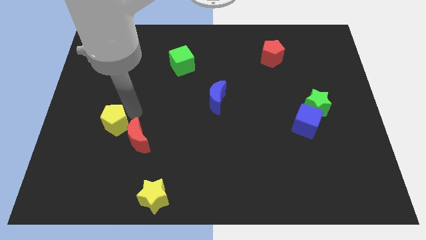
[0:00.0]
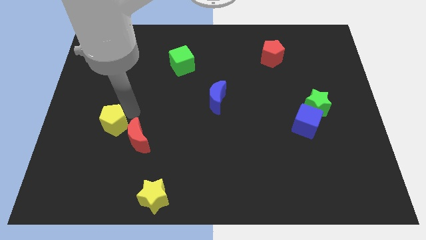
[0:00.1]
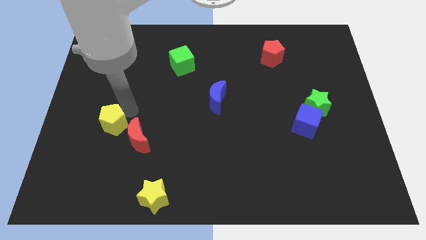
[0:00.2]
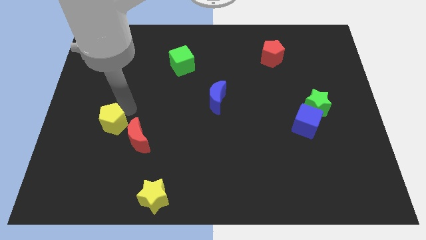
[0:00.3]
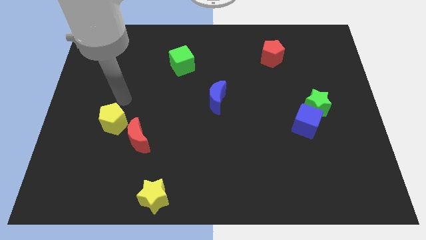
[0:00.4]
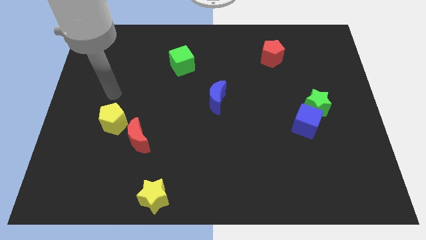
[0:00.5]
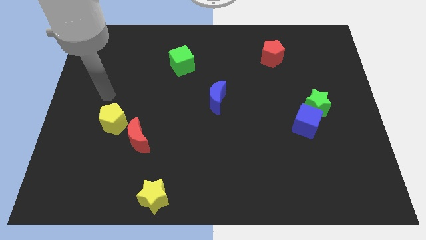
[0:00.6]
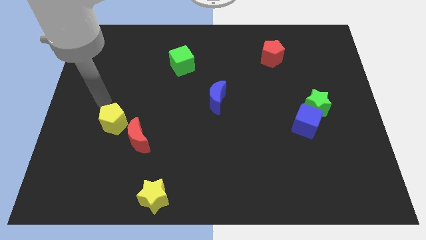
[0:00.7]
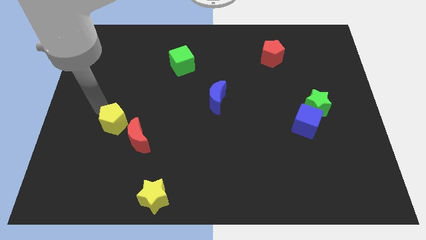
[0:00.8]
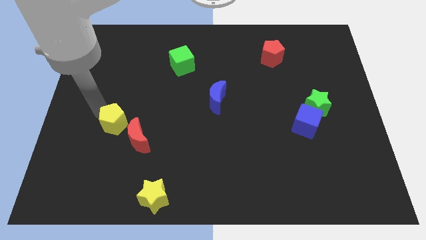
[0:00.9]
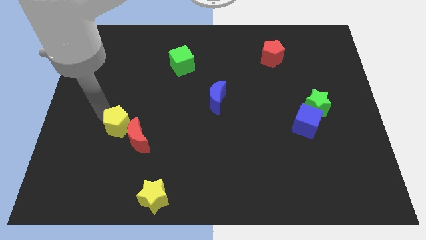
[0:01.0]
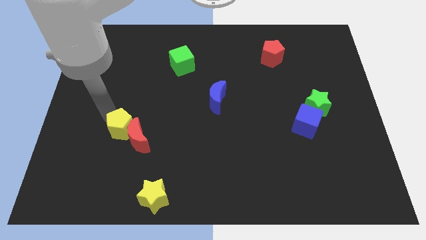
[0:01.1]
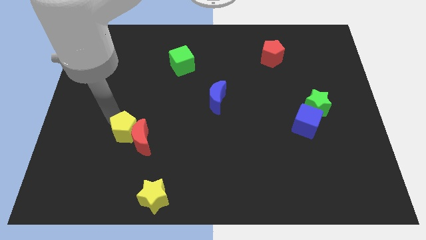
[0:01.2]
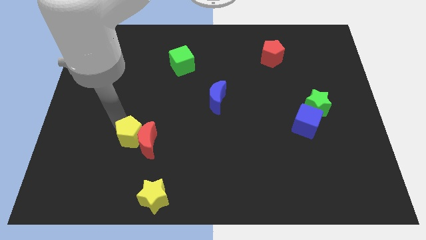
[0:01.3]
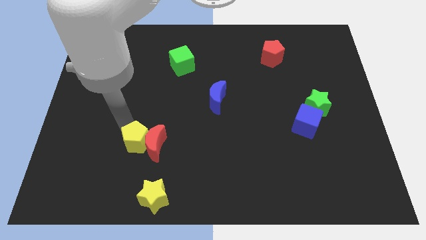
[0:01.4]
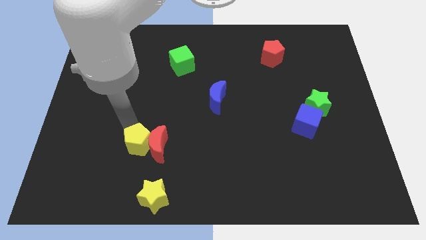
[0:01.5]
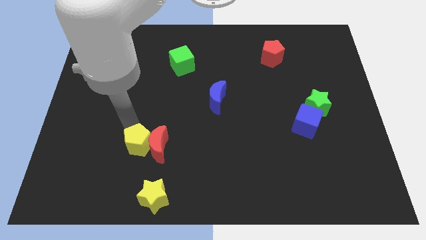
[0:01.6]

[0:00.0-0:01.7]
move red moon and yellow pentagon slightly right

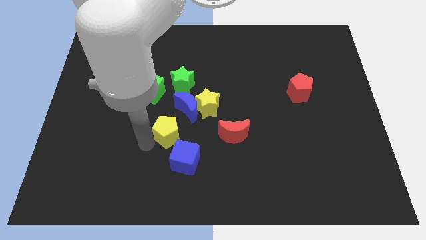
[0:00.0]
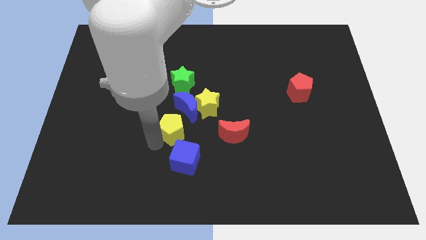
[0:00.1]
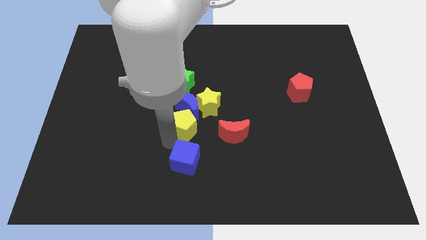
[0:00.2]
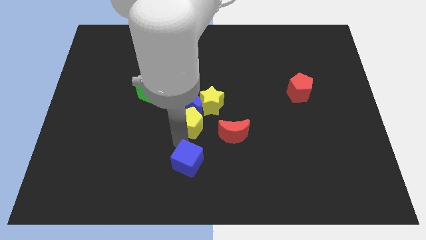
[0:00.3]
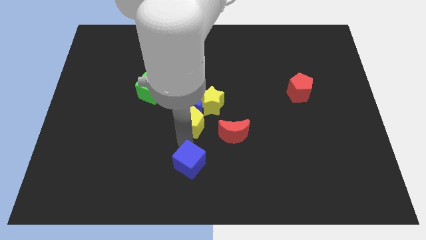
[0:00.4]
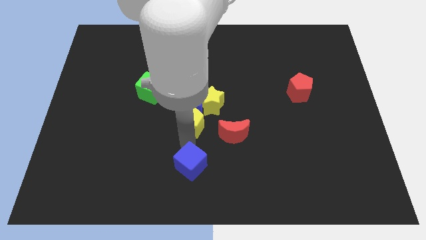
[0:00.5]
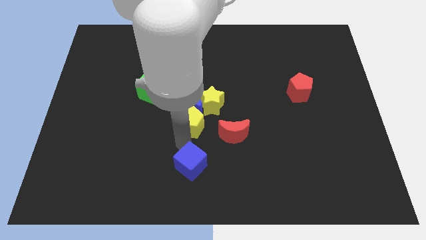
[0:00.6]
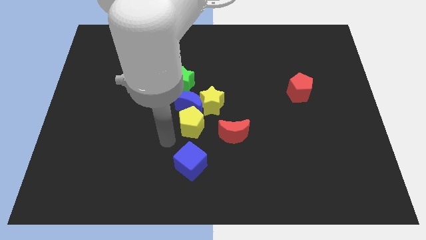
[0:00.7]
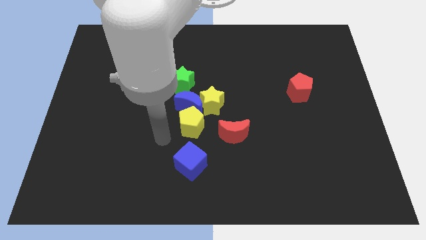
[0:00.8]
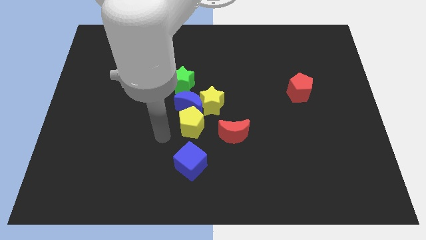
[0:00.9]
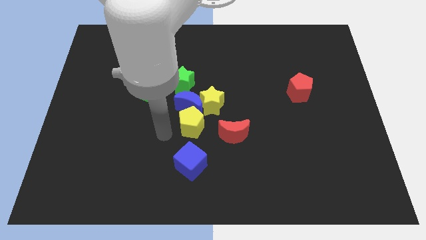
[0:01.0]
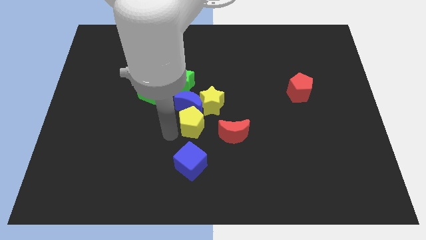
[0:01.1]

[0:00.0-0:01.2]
push the yellow pentagon to the left of red crescent

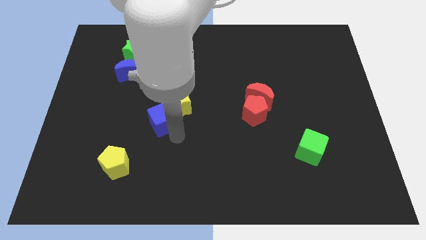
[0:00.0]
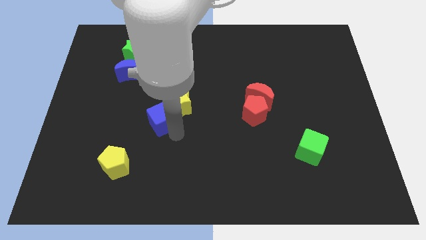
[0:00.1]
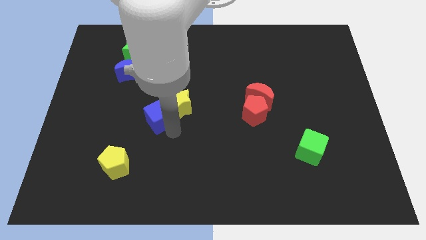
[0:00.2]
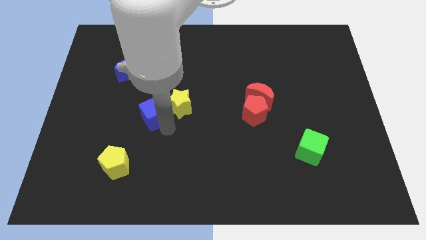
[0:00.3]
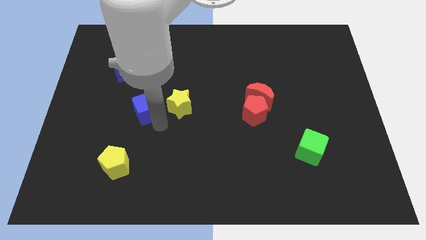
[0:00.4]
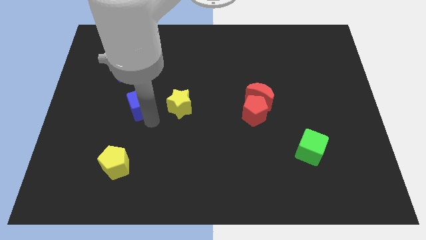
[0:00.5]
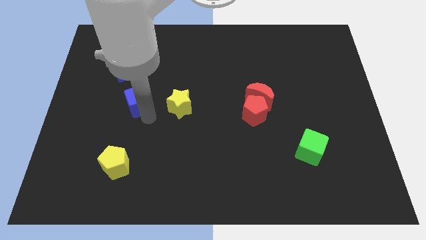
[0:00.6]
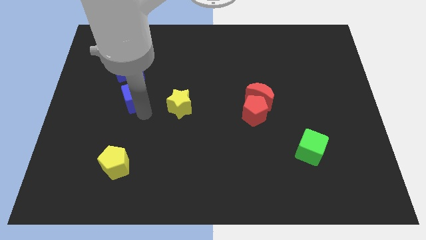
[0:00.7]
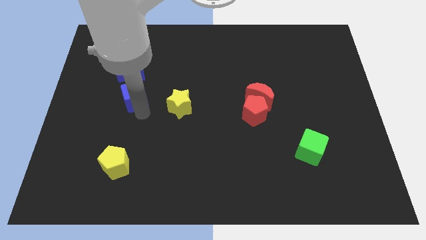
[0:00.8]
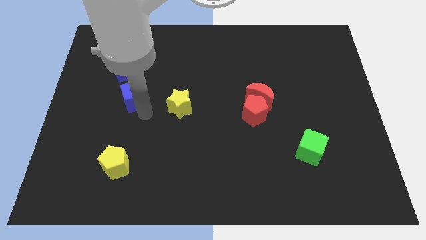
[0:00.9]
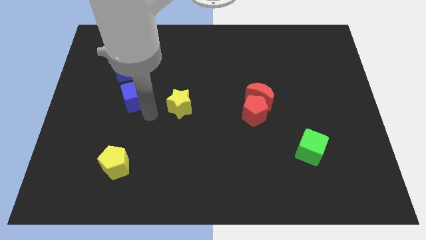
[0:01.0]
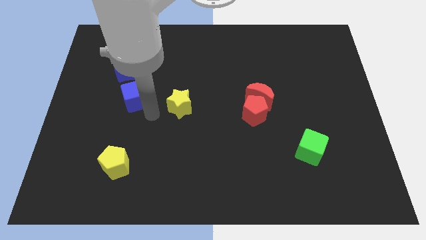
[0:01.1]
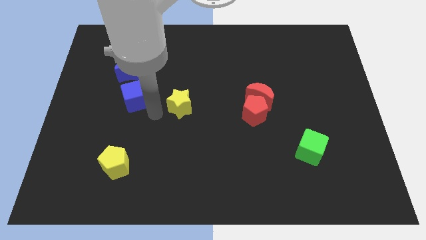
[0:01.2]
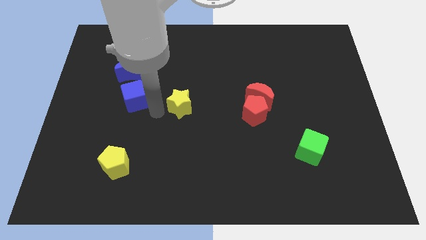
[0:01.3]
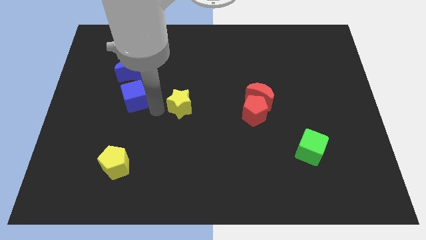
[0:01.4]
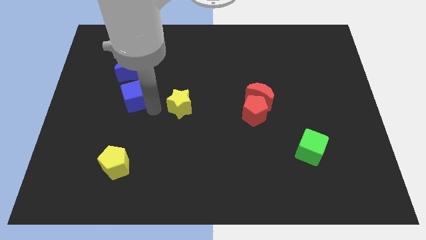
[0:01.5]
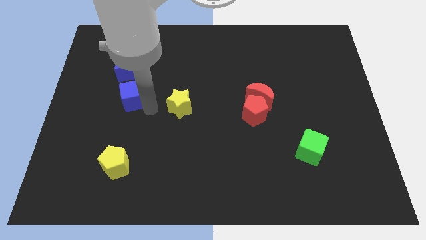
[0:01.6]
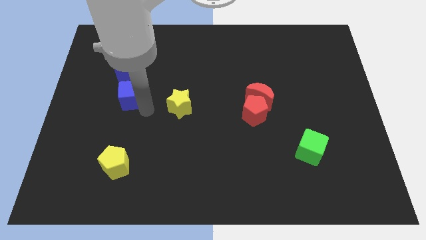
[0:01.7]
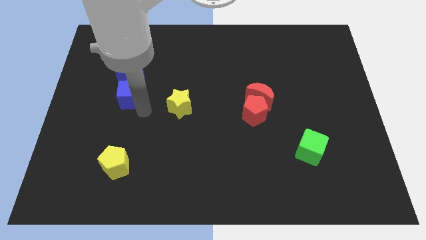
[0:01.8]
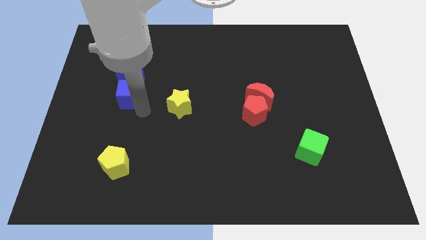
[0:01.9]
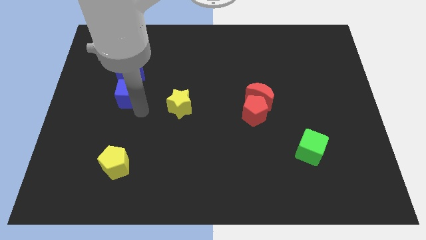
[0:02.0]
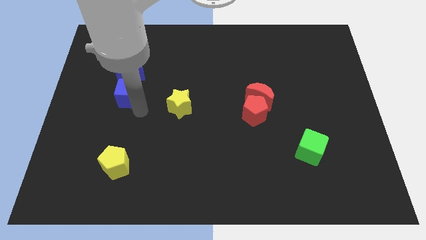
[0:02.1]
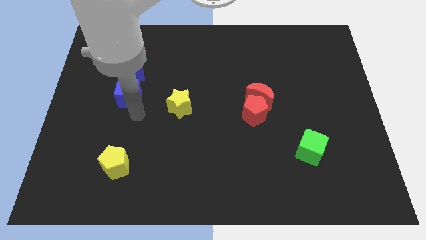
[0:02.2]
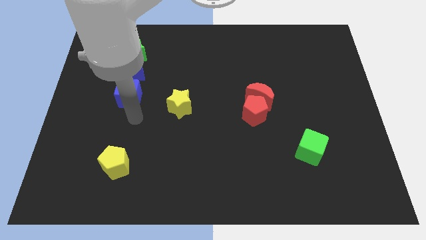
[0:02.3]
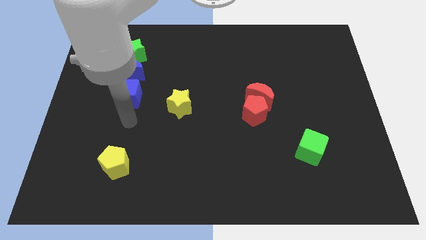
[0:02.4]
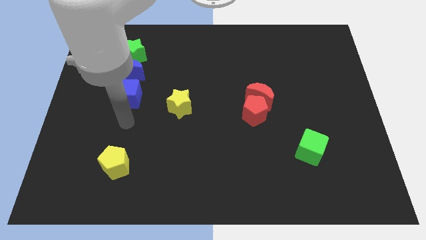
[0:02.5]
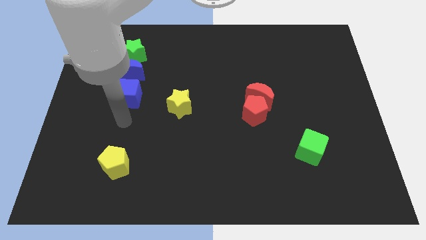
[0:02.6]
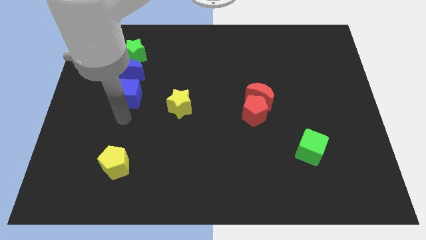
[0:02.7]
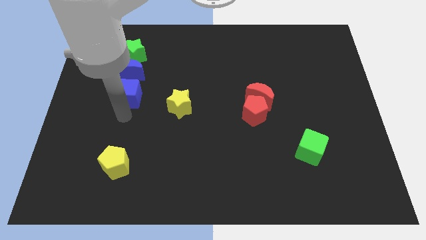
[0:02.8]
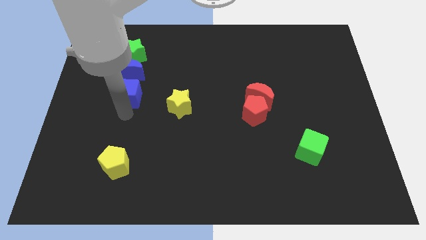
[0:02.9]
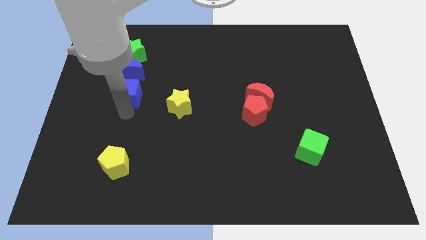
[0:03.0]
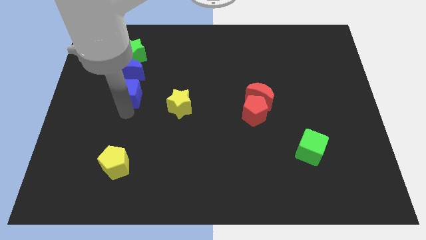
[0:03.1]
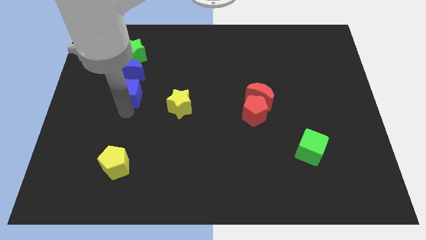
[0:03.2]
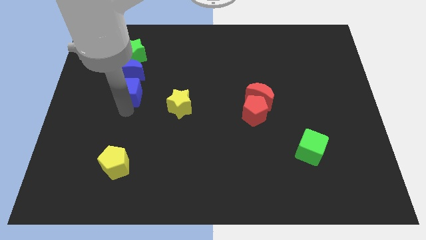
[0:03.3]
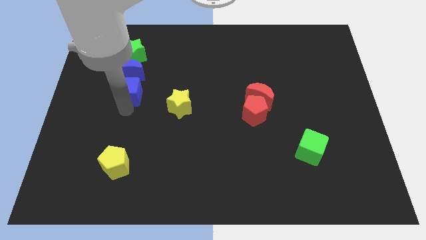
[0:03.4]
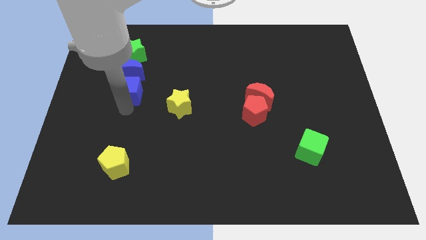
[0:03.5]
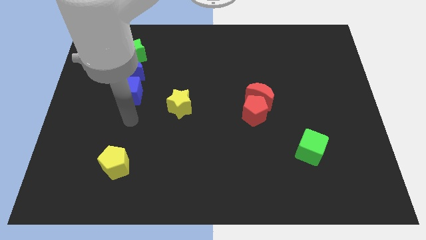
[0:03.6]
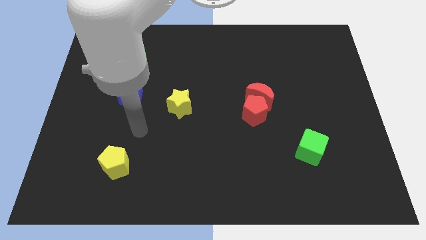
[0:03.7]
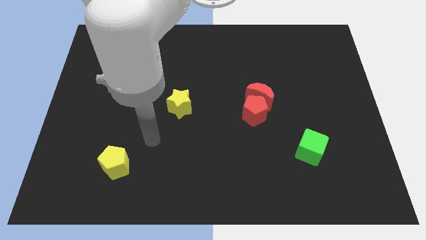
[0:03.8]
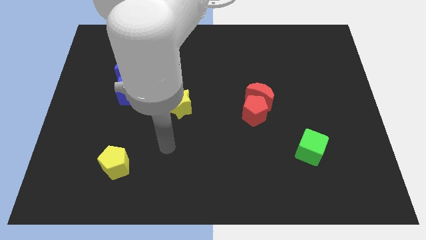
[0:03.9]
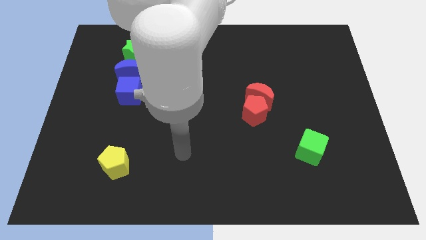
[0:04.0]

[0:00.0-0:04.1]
separate the blue cube from the yellow star

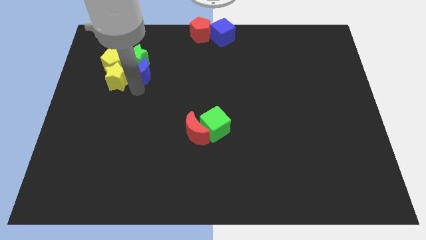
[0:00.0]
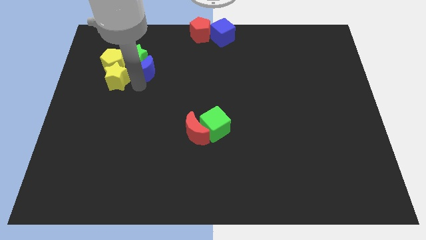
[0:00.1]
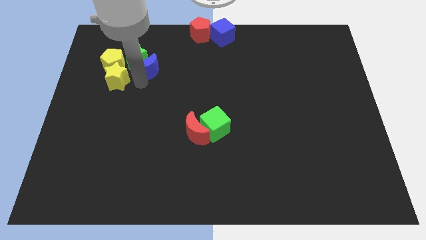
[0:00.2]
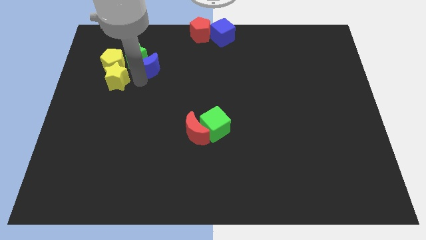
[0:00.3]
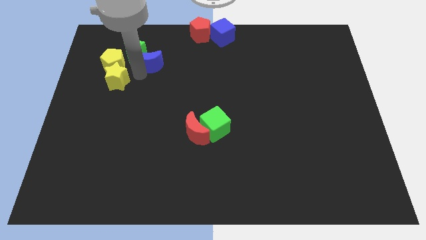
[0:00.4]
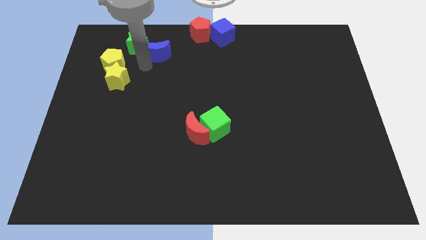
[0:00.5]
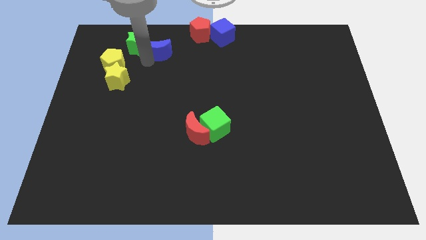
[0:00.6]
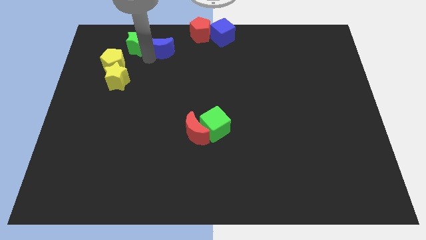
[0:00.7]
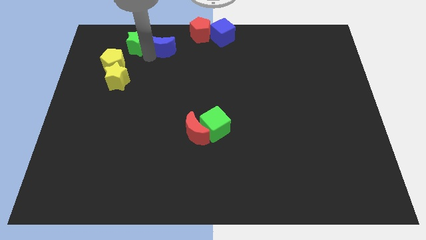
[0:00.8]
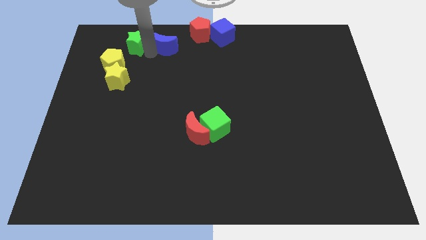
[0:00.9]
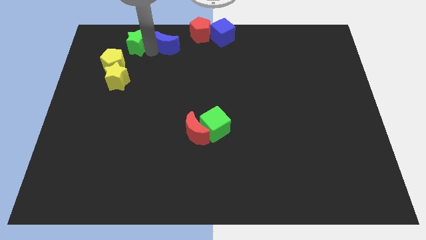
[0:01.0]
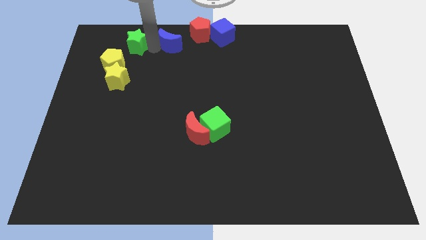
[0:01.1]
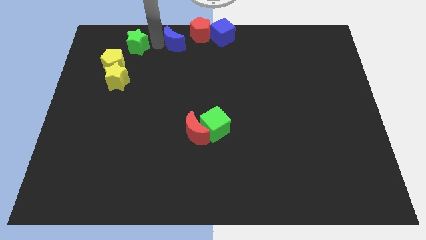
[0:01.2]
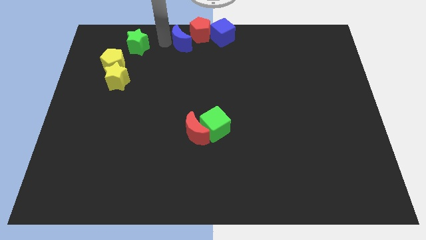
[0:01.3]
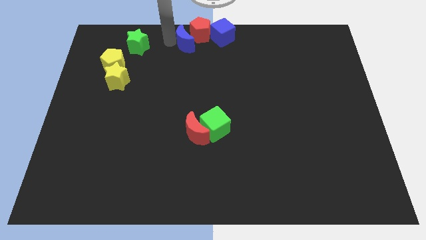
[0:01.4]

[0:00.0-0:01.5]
push the green star with the blue moon

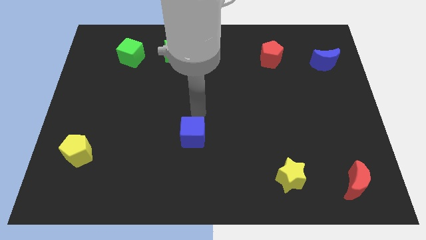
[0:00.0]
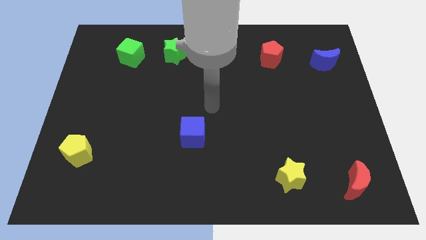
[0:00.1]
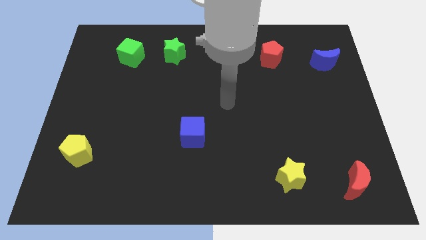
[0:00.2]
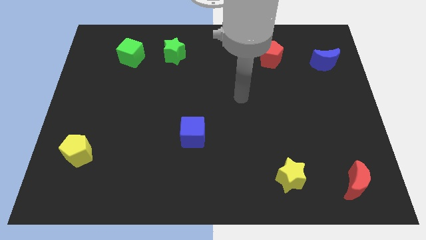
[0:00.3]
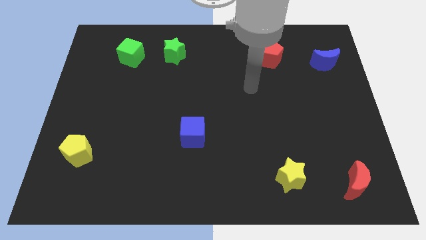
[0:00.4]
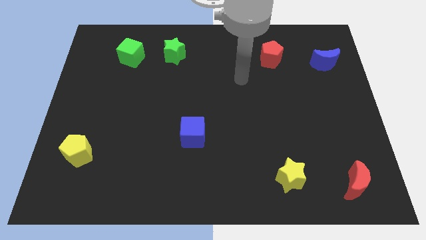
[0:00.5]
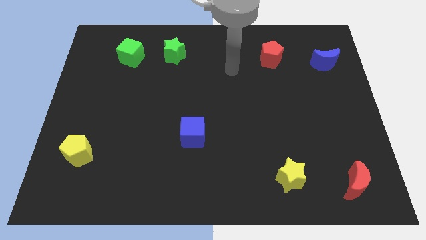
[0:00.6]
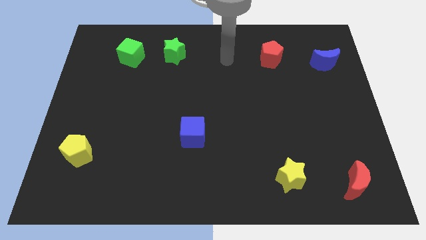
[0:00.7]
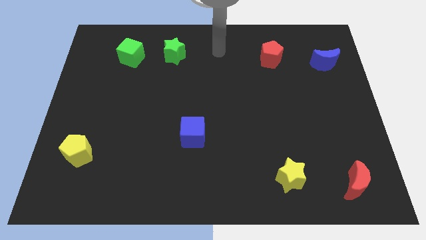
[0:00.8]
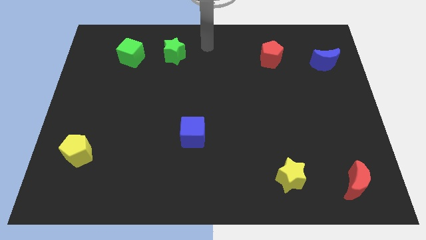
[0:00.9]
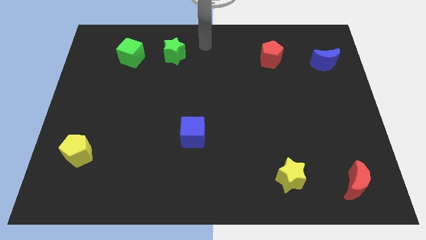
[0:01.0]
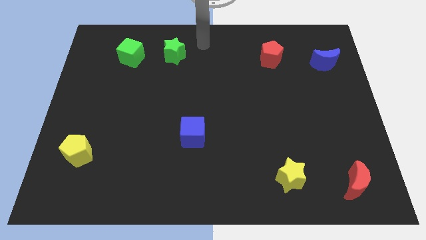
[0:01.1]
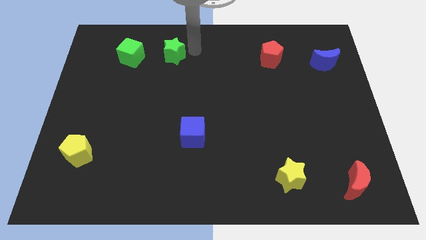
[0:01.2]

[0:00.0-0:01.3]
move your arm away from the blue cube
